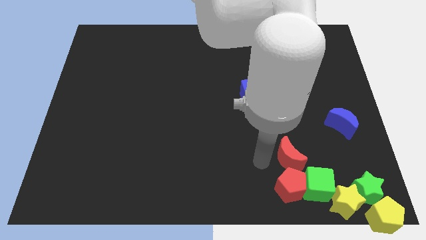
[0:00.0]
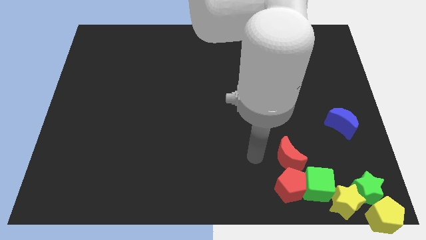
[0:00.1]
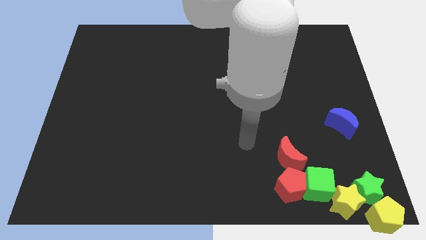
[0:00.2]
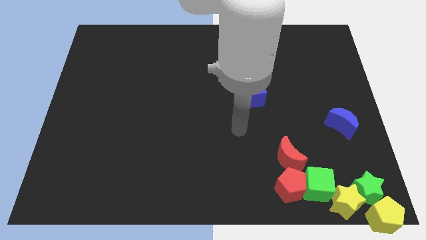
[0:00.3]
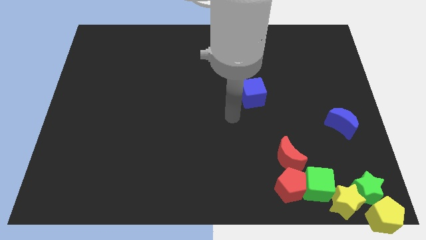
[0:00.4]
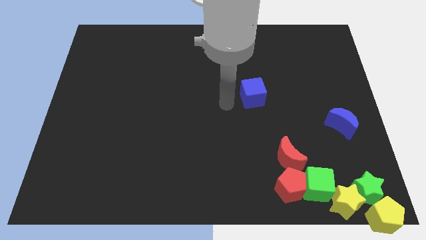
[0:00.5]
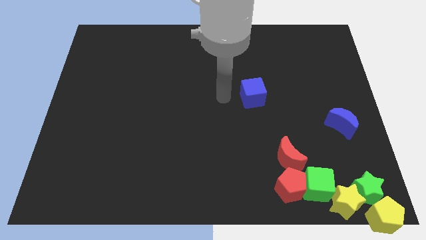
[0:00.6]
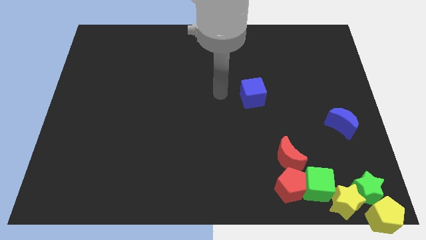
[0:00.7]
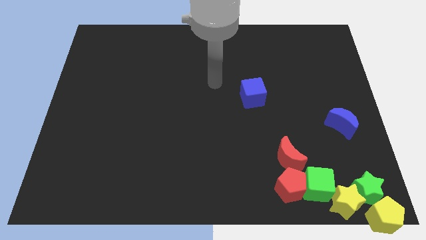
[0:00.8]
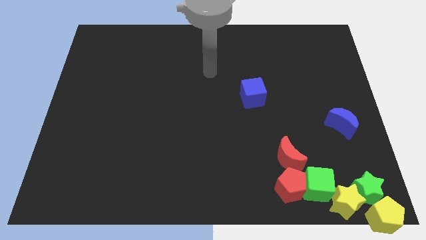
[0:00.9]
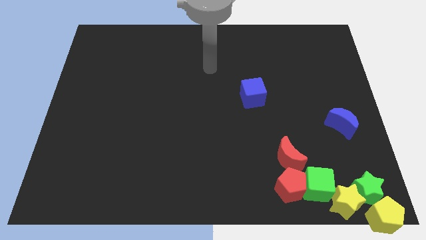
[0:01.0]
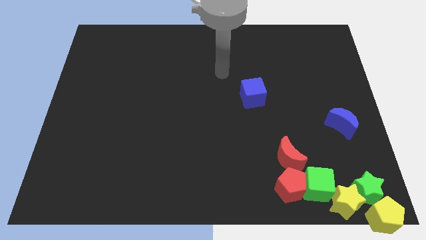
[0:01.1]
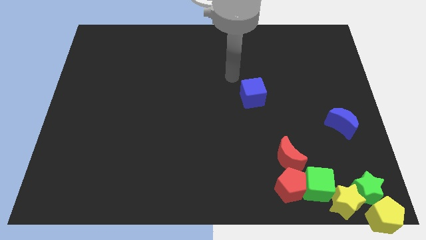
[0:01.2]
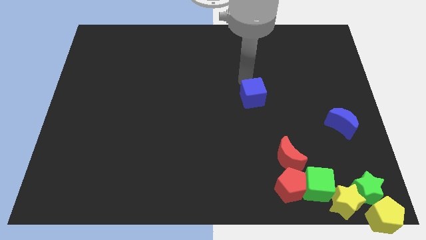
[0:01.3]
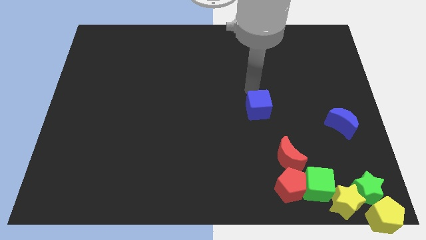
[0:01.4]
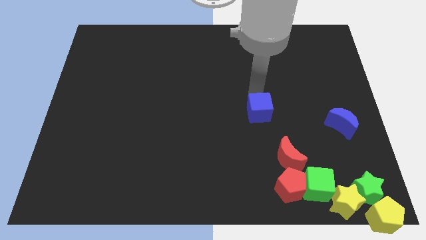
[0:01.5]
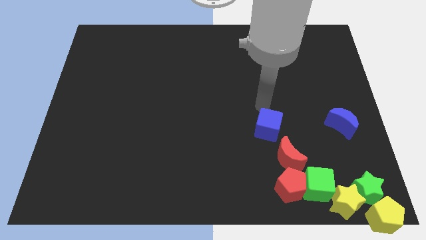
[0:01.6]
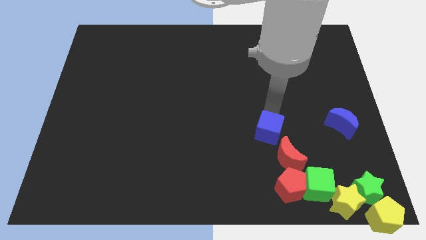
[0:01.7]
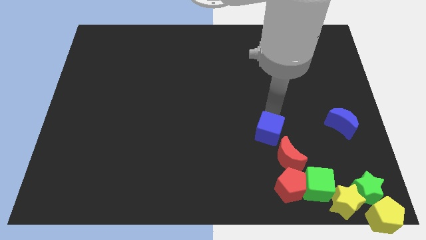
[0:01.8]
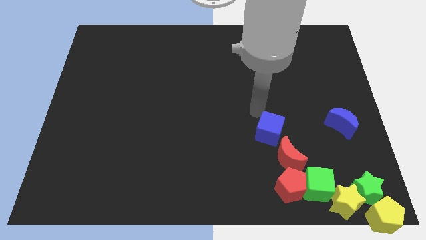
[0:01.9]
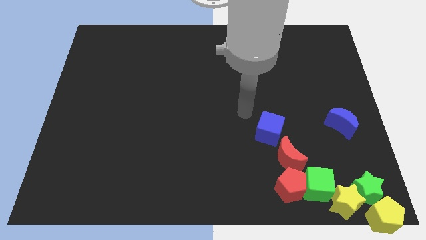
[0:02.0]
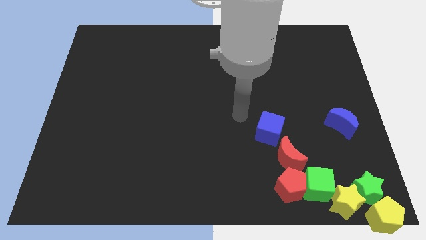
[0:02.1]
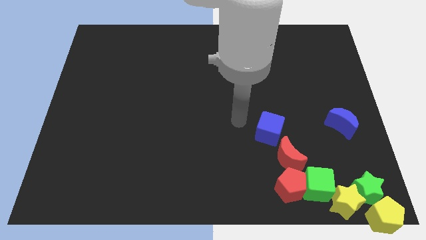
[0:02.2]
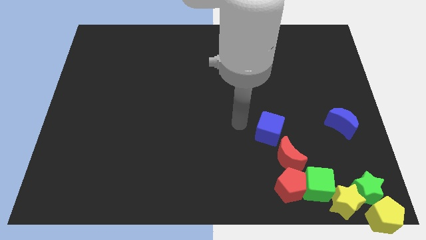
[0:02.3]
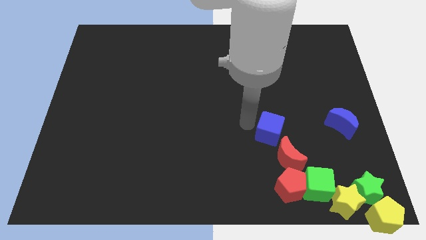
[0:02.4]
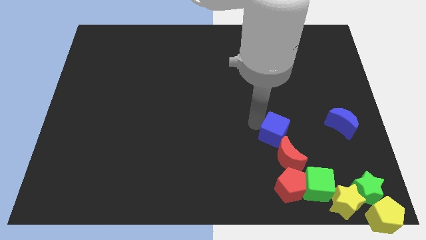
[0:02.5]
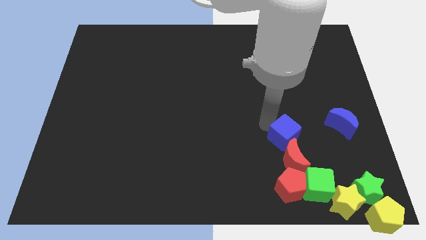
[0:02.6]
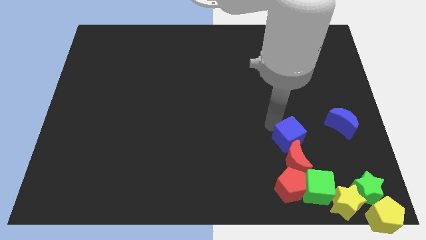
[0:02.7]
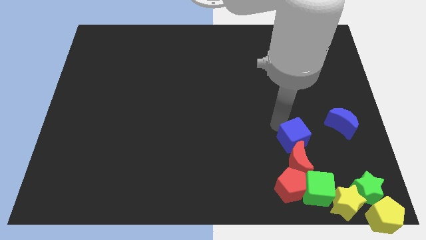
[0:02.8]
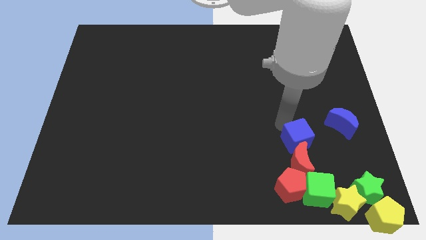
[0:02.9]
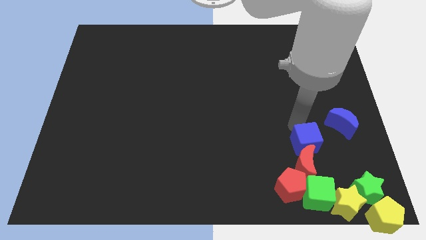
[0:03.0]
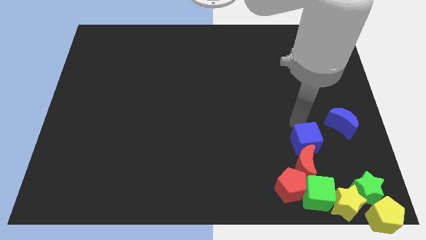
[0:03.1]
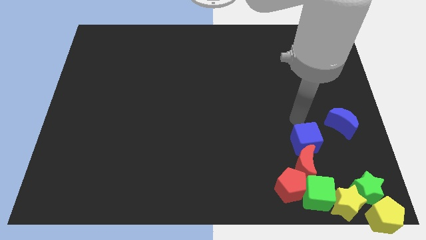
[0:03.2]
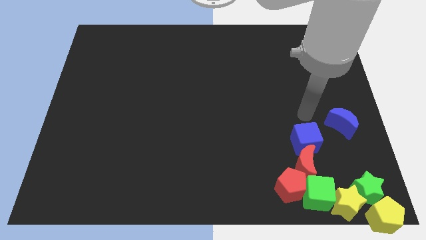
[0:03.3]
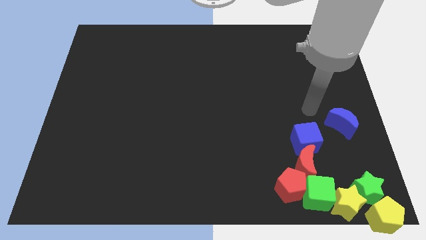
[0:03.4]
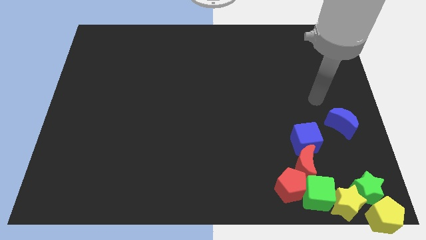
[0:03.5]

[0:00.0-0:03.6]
place blue cube to the top of red moon

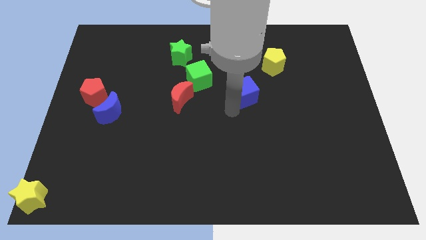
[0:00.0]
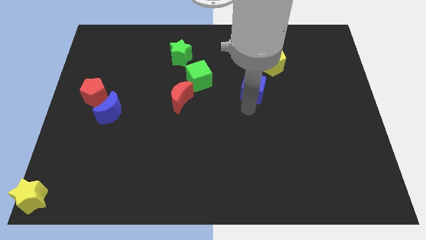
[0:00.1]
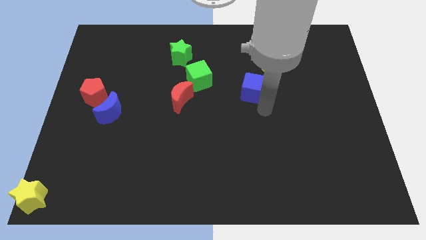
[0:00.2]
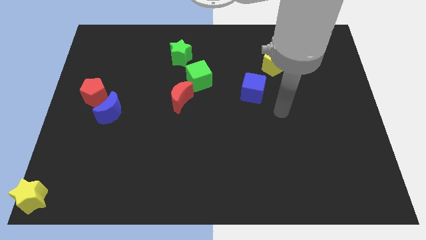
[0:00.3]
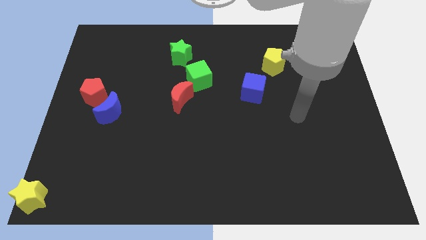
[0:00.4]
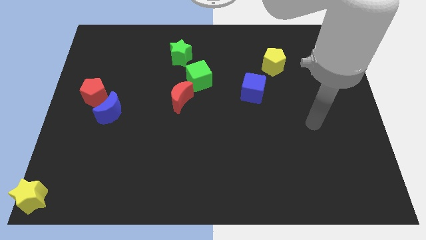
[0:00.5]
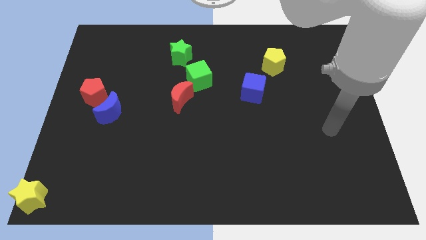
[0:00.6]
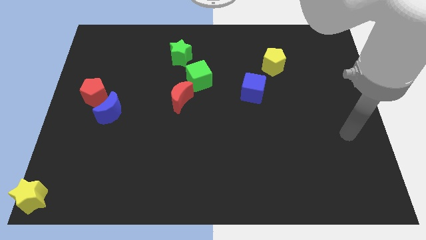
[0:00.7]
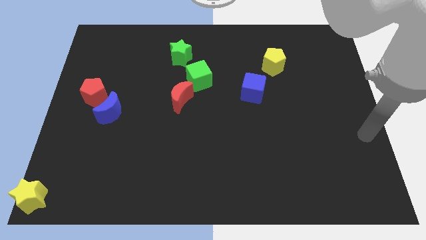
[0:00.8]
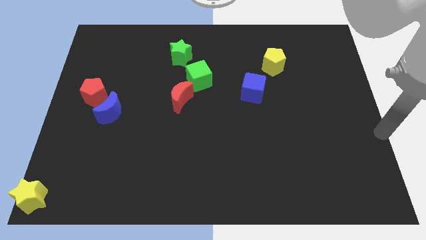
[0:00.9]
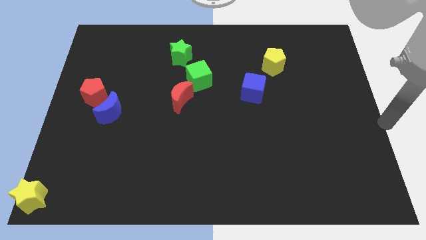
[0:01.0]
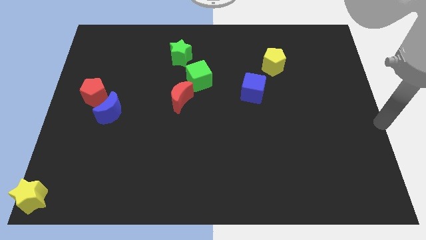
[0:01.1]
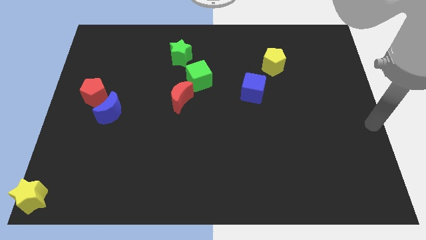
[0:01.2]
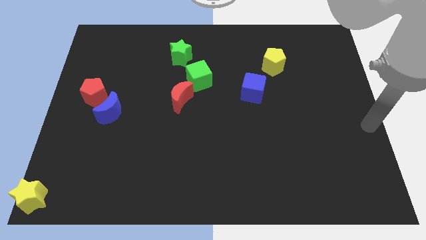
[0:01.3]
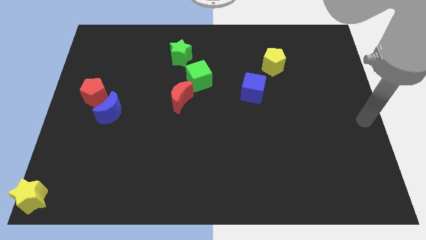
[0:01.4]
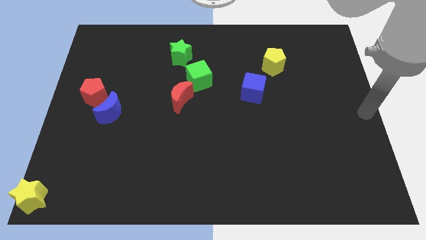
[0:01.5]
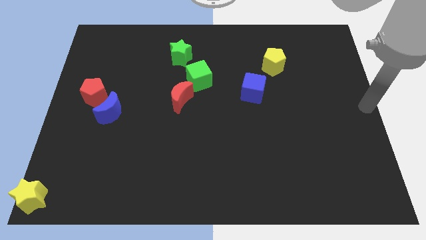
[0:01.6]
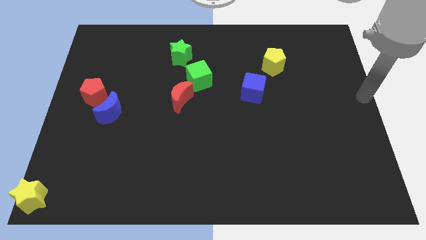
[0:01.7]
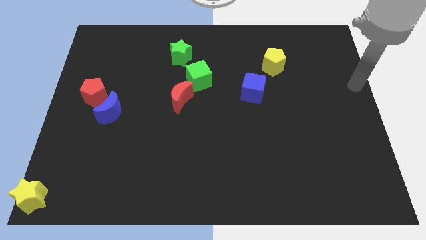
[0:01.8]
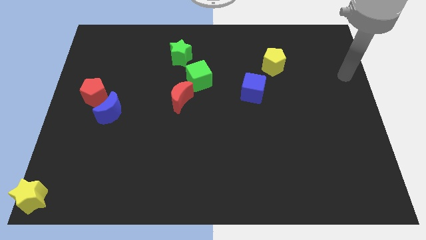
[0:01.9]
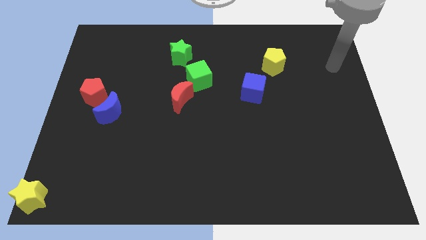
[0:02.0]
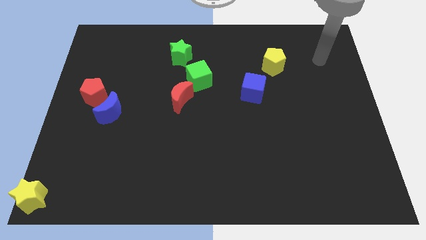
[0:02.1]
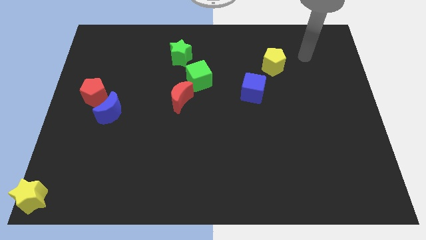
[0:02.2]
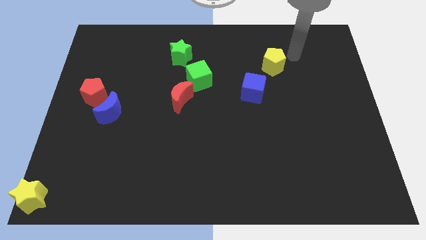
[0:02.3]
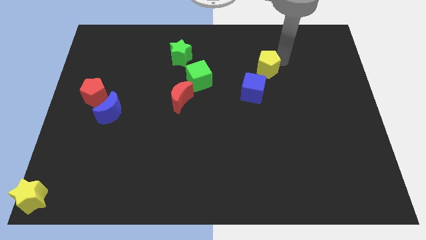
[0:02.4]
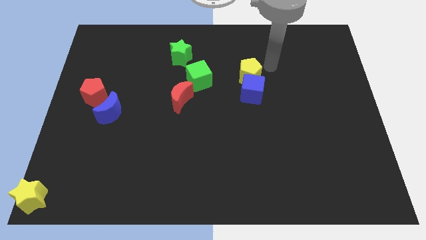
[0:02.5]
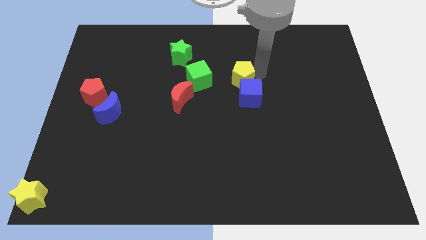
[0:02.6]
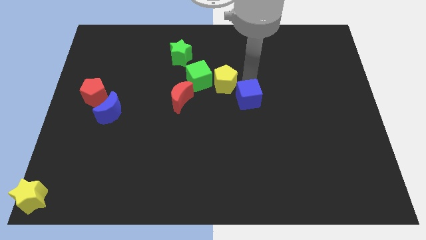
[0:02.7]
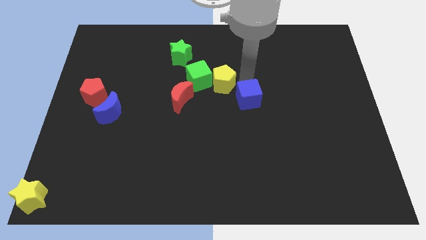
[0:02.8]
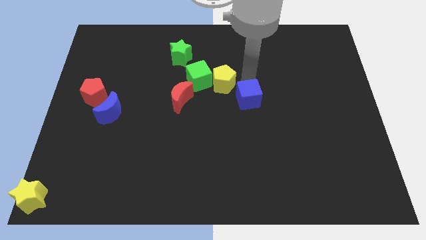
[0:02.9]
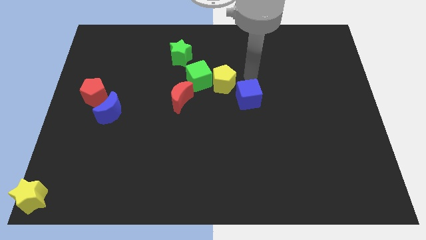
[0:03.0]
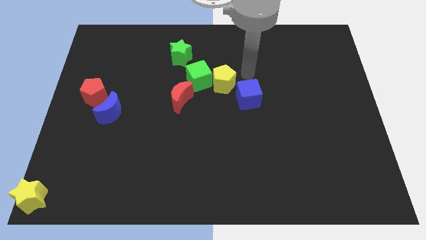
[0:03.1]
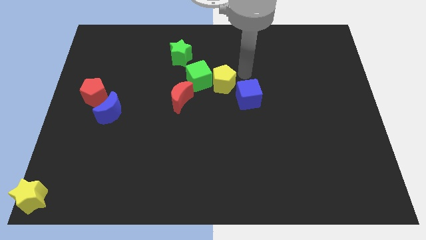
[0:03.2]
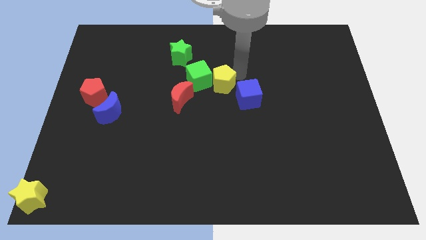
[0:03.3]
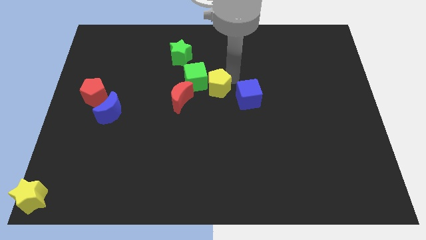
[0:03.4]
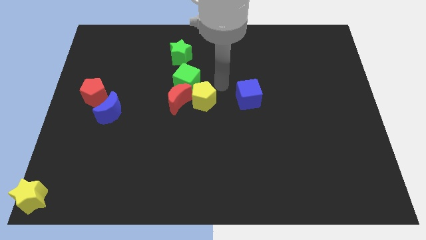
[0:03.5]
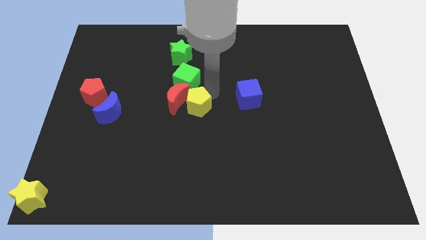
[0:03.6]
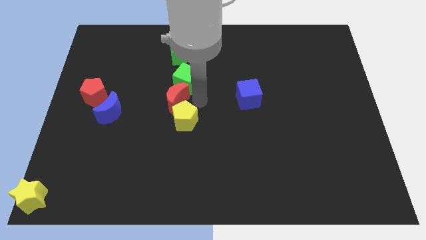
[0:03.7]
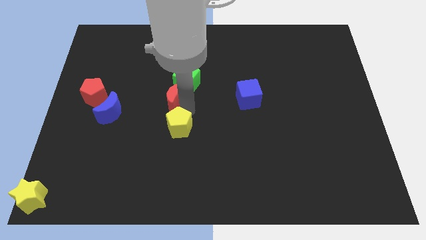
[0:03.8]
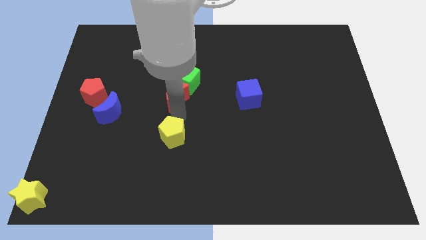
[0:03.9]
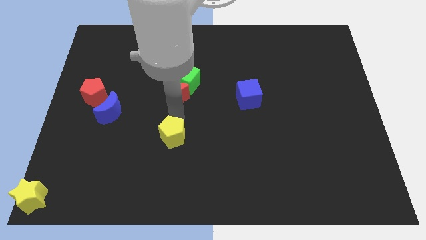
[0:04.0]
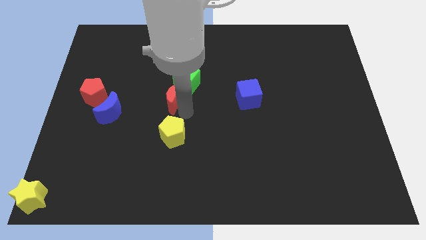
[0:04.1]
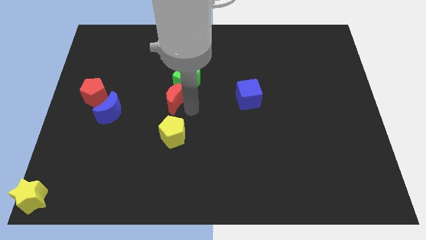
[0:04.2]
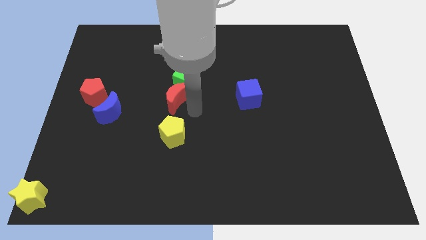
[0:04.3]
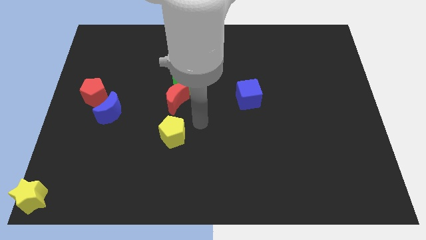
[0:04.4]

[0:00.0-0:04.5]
make a vertical line with the yellow pentagon red moon and green cube

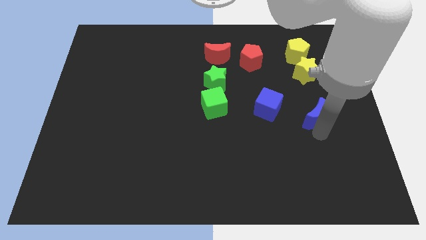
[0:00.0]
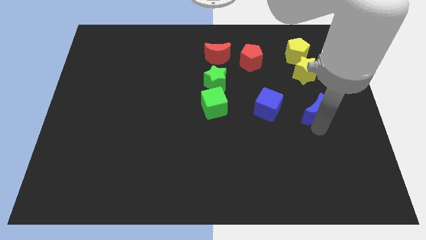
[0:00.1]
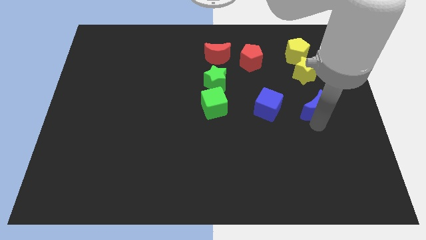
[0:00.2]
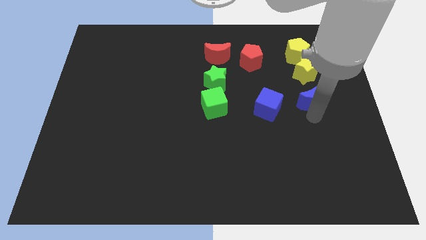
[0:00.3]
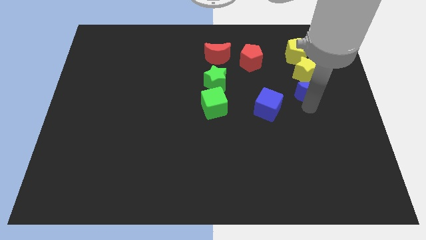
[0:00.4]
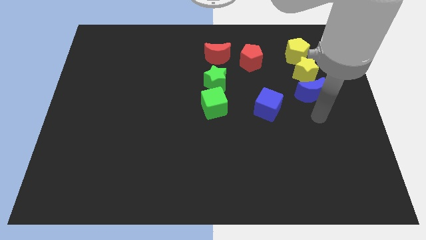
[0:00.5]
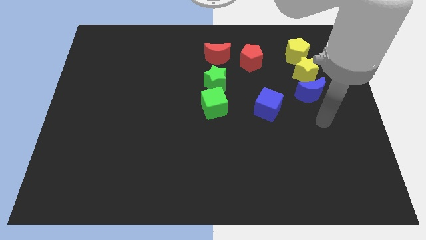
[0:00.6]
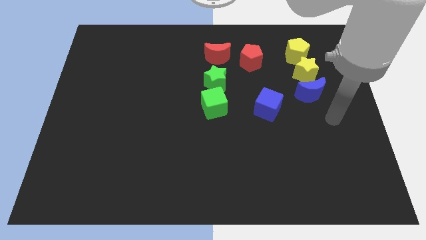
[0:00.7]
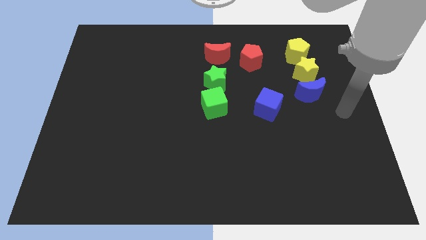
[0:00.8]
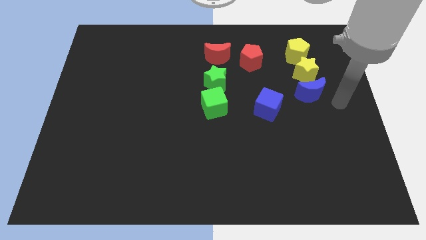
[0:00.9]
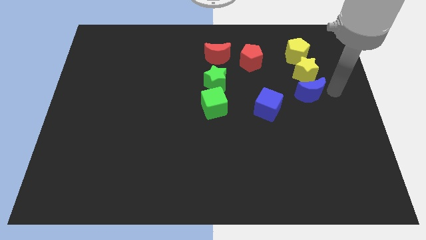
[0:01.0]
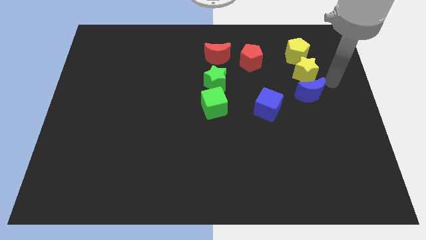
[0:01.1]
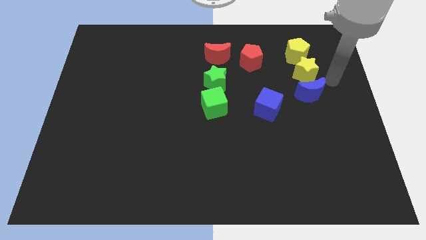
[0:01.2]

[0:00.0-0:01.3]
move the blue cube left to the blue moon
